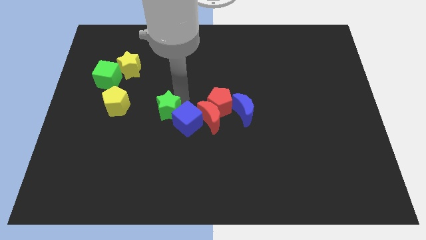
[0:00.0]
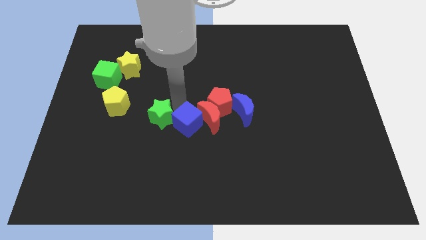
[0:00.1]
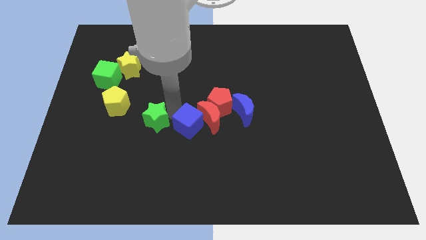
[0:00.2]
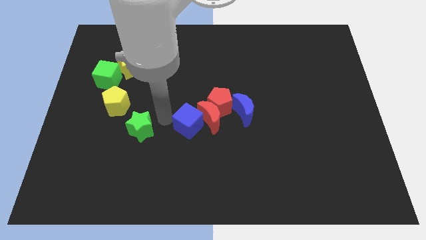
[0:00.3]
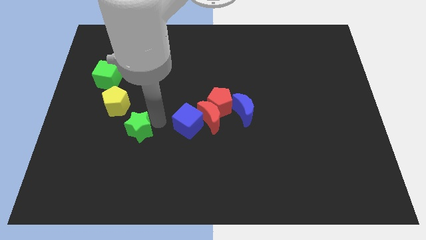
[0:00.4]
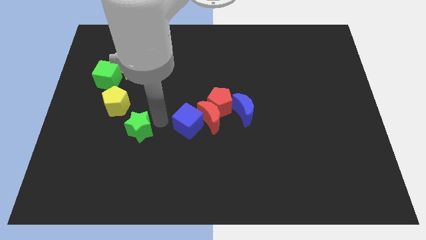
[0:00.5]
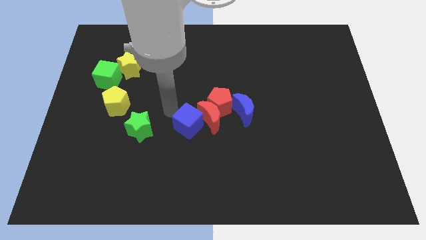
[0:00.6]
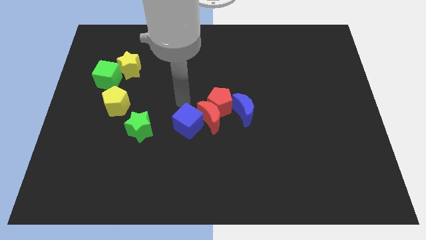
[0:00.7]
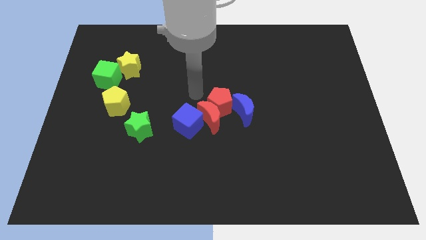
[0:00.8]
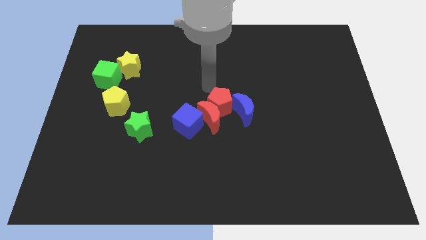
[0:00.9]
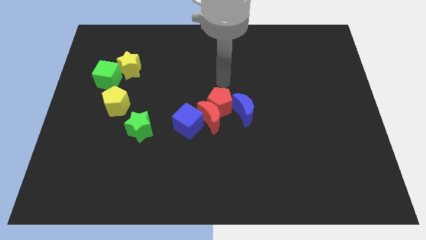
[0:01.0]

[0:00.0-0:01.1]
separate green star and the blue cube

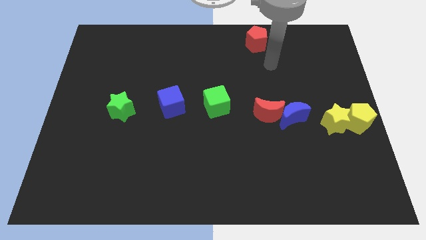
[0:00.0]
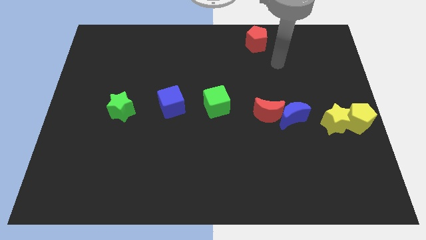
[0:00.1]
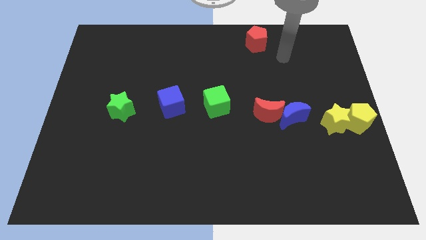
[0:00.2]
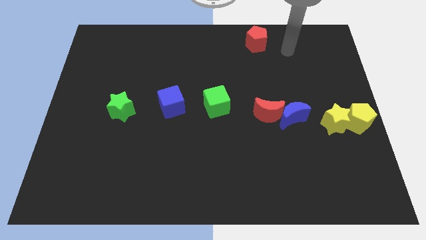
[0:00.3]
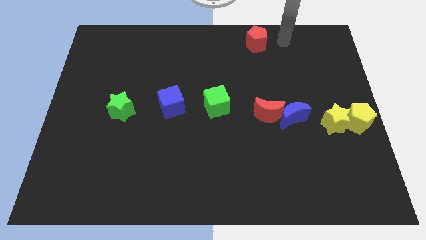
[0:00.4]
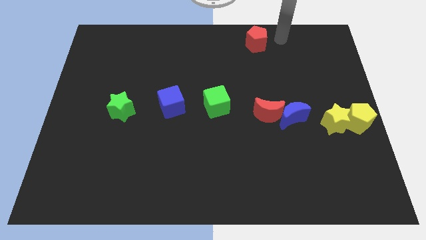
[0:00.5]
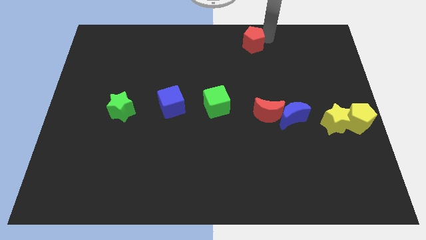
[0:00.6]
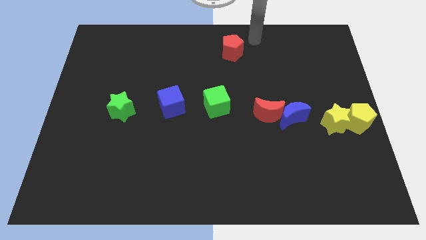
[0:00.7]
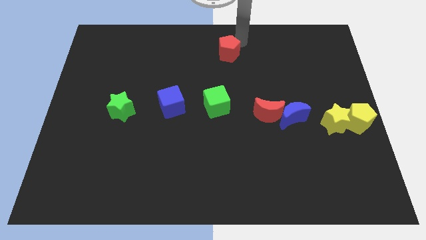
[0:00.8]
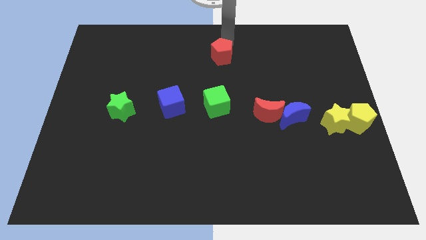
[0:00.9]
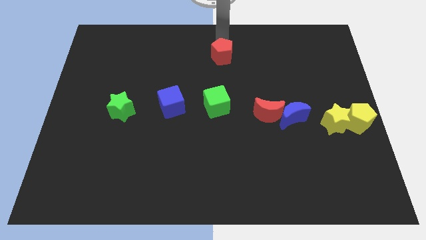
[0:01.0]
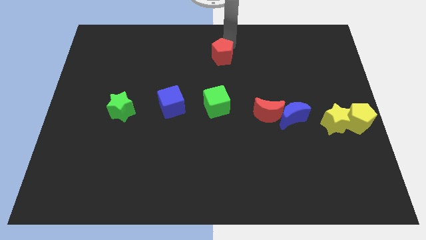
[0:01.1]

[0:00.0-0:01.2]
place the red pentagon at the top of the green cube

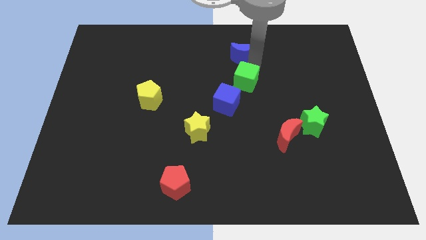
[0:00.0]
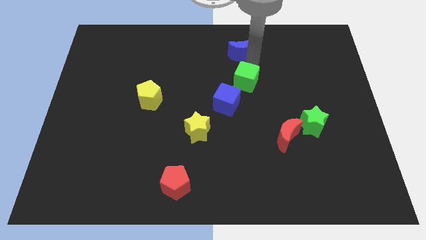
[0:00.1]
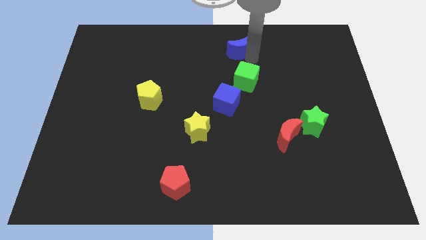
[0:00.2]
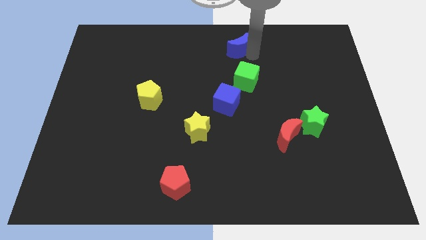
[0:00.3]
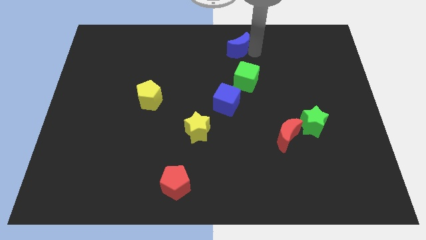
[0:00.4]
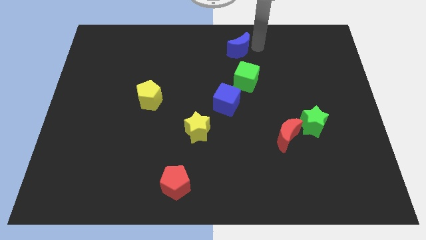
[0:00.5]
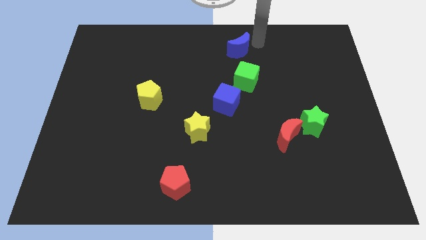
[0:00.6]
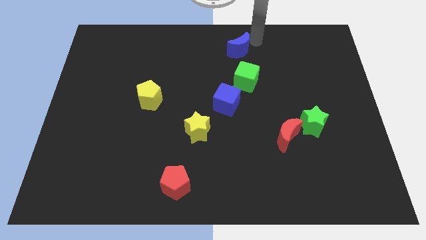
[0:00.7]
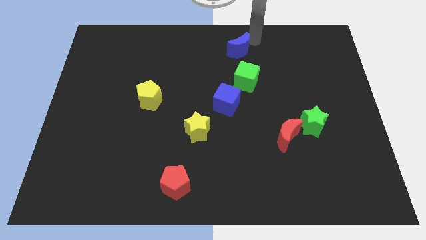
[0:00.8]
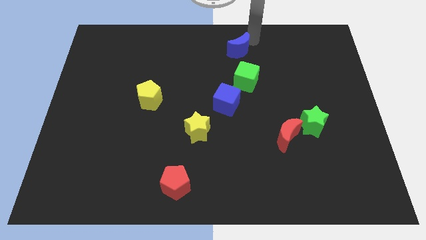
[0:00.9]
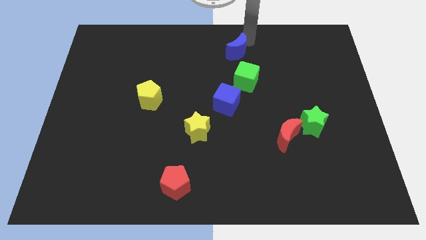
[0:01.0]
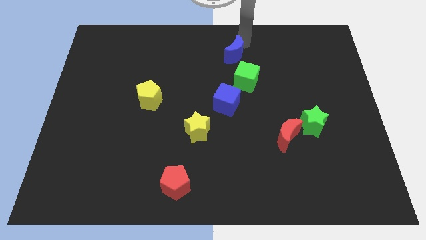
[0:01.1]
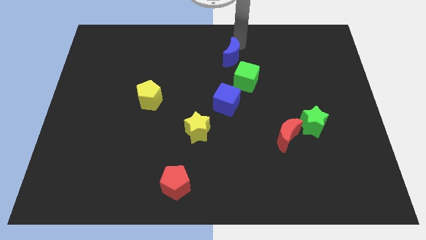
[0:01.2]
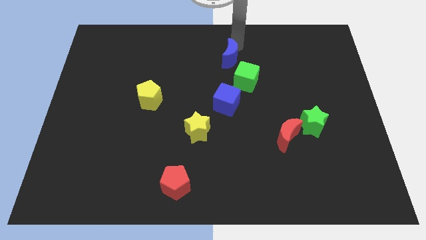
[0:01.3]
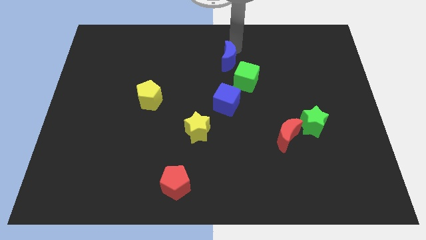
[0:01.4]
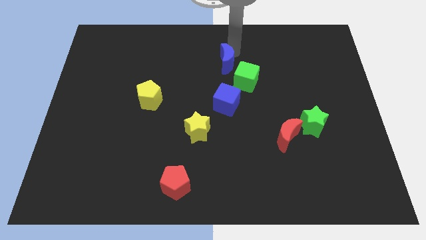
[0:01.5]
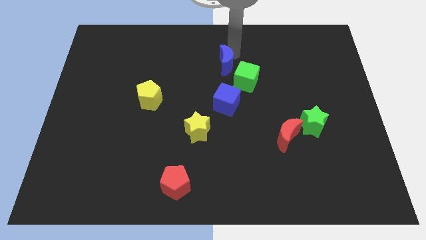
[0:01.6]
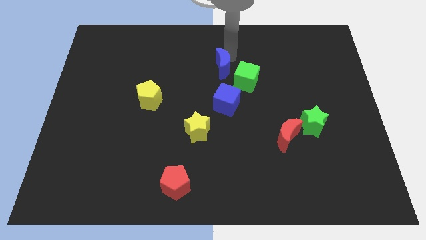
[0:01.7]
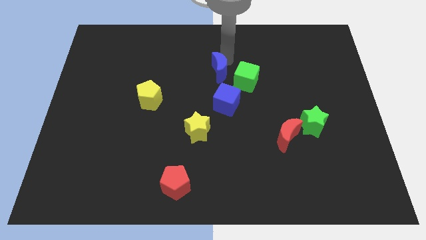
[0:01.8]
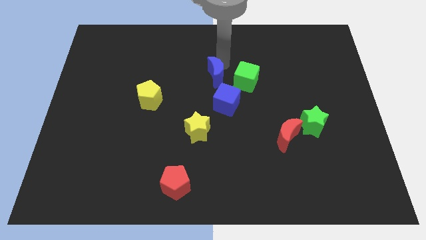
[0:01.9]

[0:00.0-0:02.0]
slide the blue moon close to the blue cube

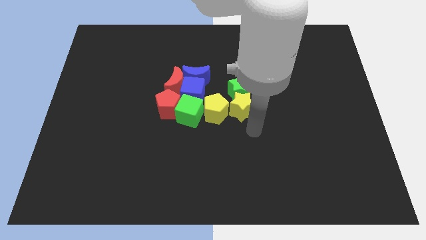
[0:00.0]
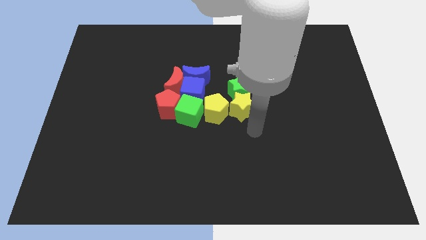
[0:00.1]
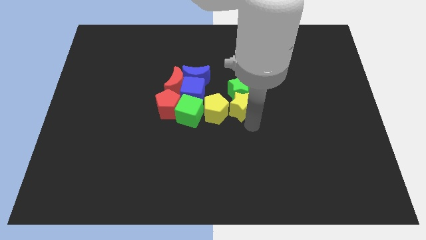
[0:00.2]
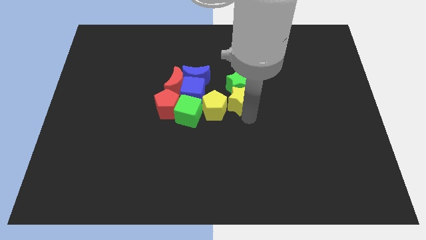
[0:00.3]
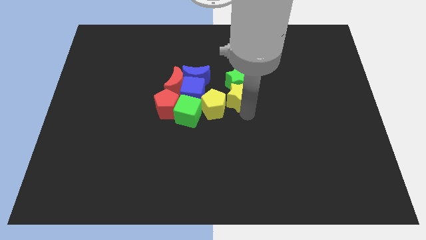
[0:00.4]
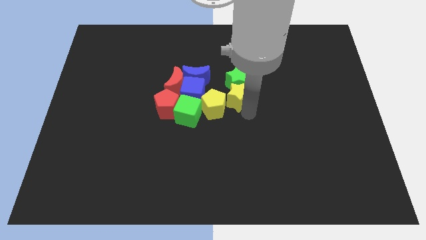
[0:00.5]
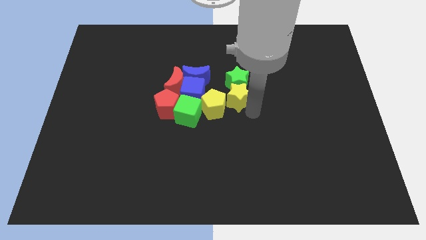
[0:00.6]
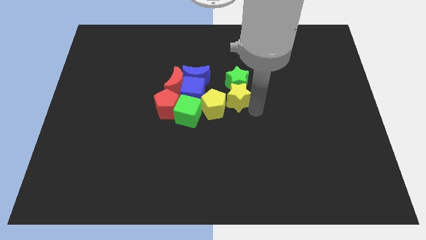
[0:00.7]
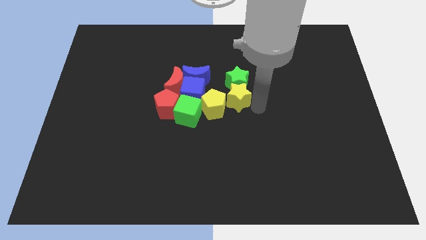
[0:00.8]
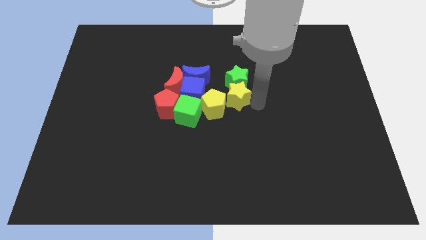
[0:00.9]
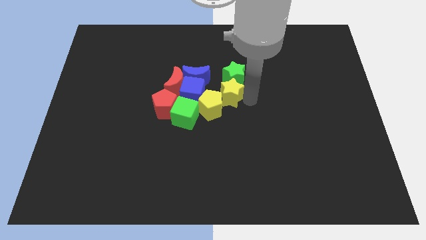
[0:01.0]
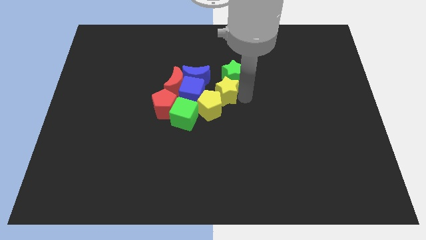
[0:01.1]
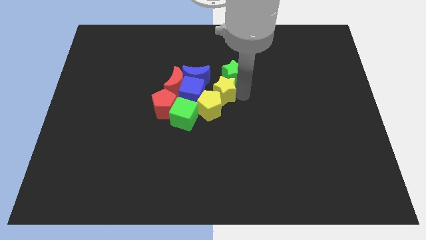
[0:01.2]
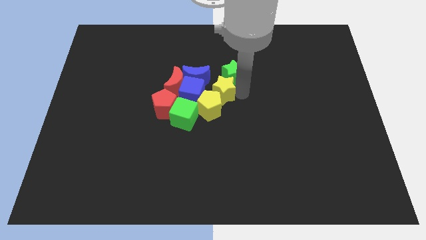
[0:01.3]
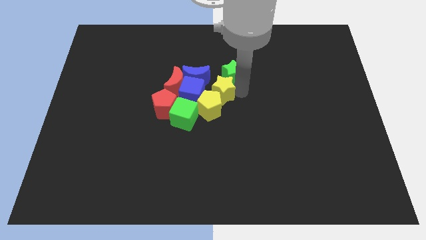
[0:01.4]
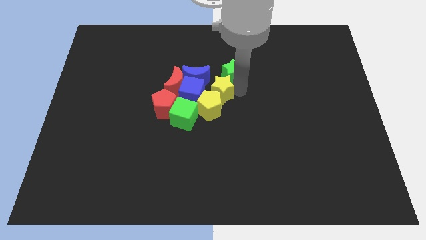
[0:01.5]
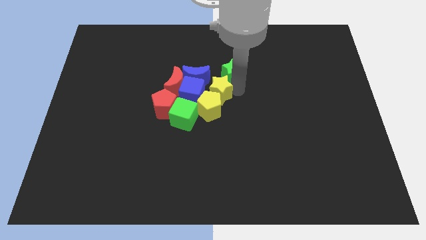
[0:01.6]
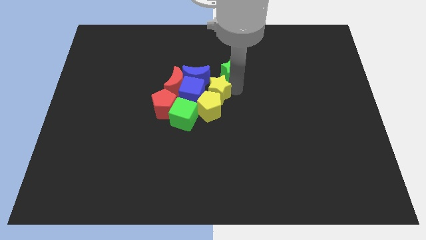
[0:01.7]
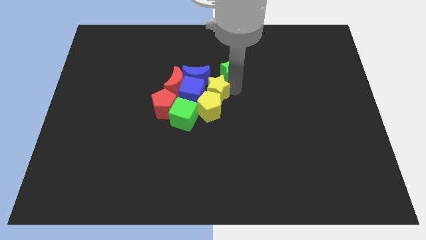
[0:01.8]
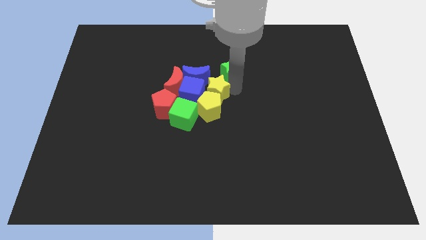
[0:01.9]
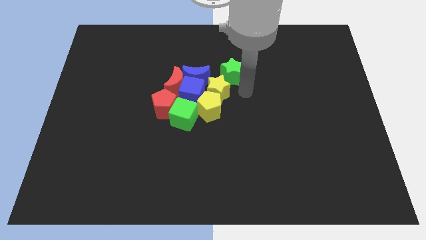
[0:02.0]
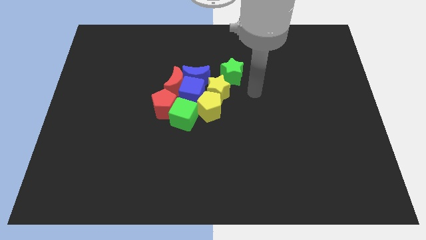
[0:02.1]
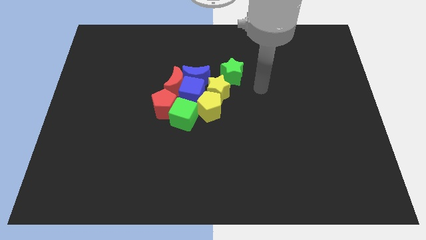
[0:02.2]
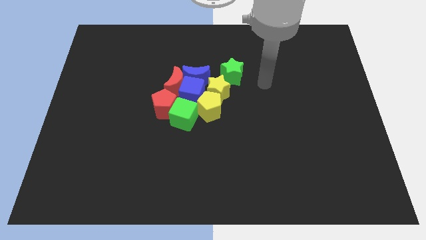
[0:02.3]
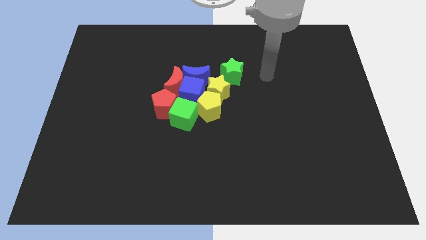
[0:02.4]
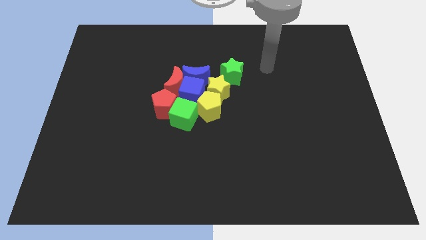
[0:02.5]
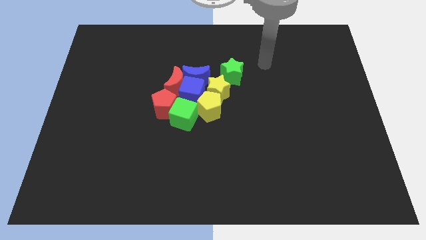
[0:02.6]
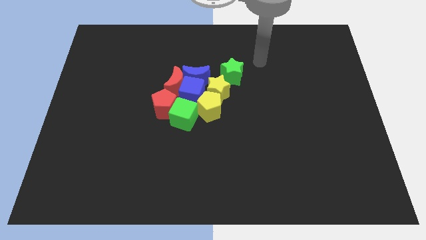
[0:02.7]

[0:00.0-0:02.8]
push the yellow star and yelloe pentagon in between the green star and green cube

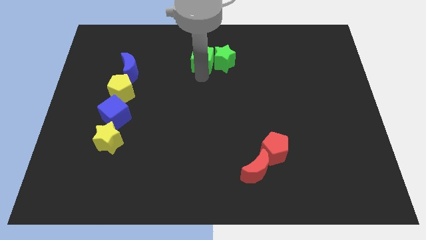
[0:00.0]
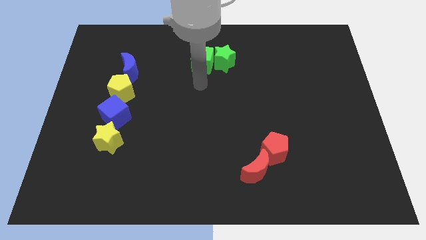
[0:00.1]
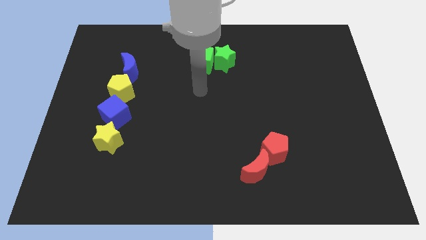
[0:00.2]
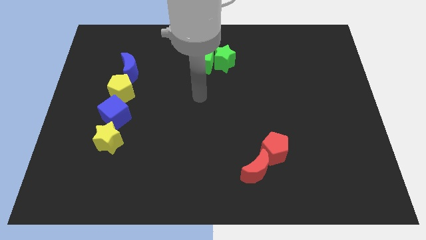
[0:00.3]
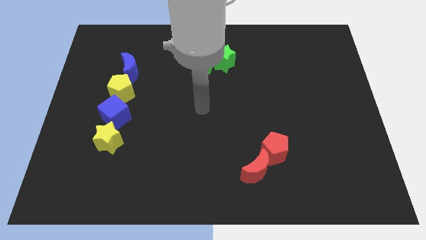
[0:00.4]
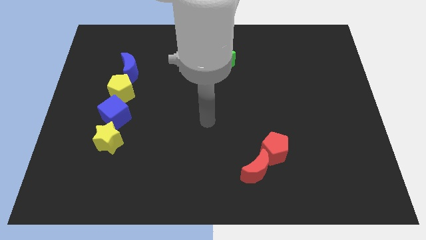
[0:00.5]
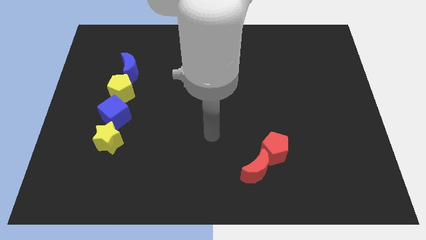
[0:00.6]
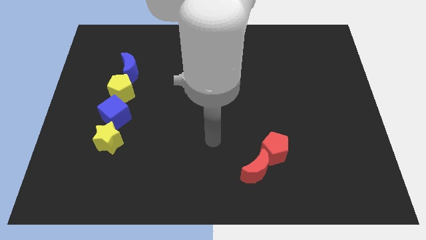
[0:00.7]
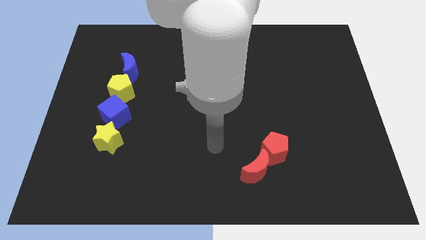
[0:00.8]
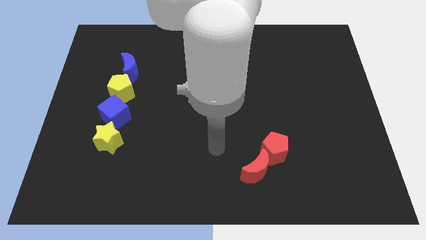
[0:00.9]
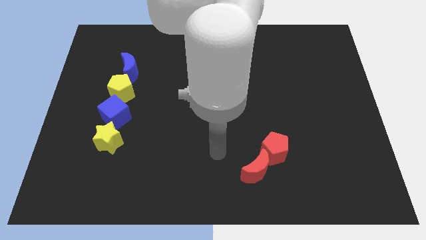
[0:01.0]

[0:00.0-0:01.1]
move your arm away from green cube

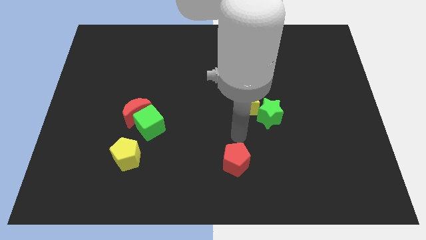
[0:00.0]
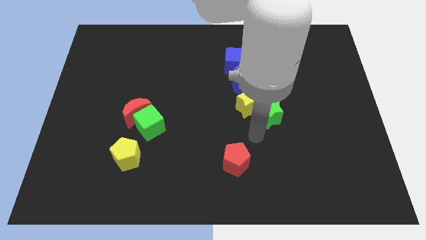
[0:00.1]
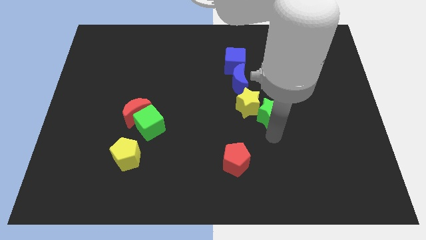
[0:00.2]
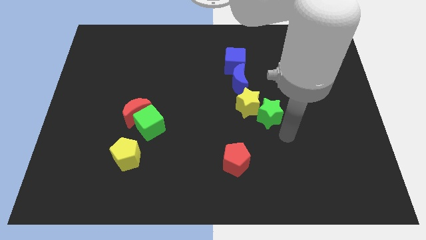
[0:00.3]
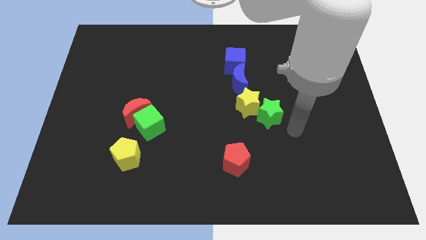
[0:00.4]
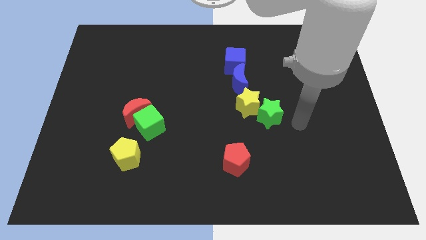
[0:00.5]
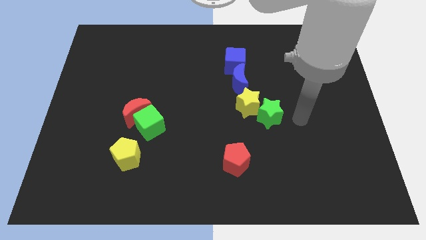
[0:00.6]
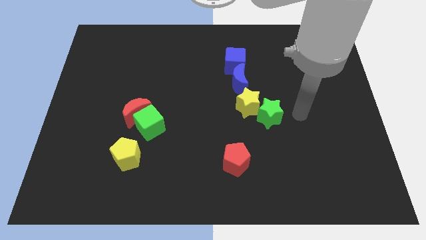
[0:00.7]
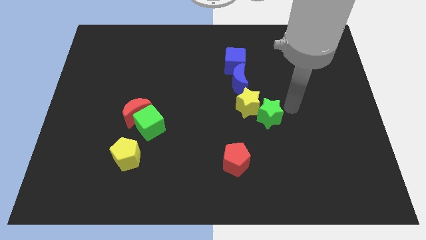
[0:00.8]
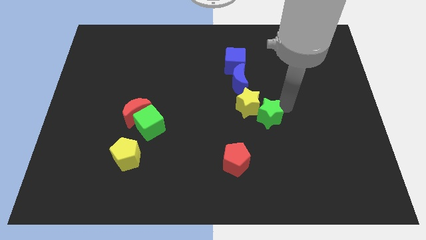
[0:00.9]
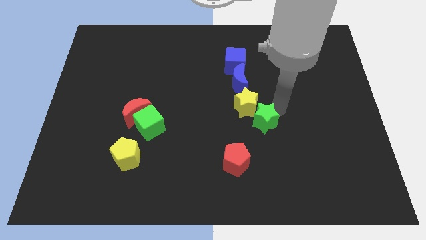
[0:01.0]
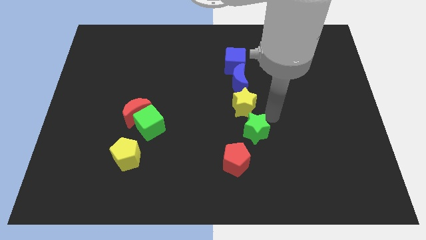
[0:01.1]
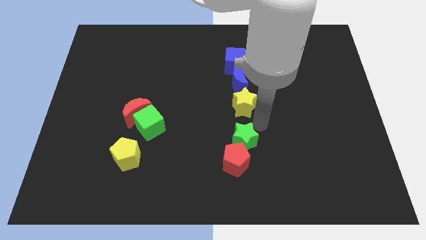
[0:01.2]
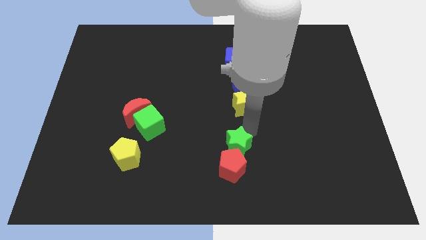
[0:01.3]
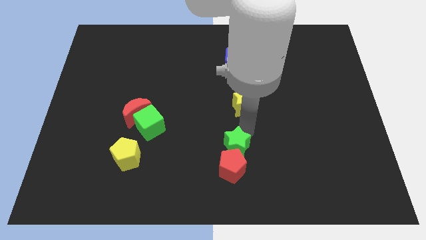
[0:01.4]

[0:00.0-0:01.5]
push the green star into the red pentagon
